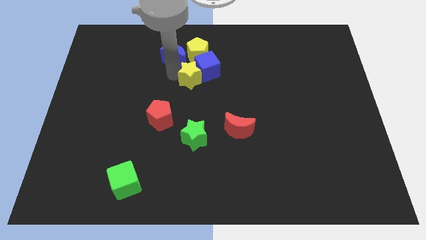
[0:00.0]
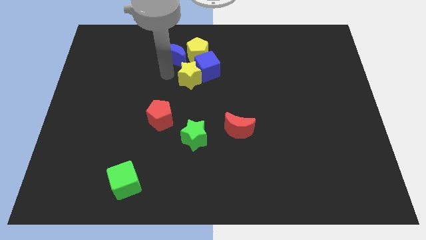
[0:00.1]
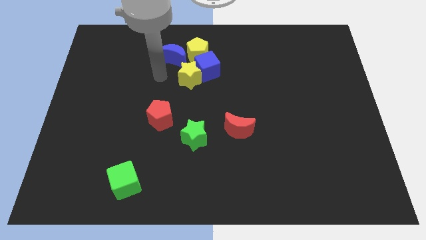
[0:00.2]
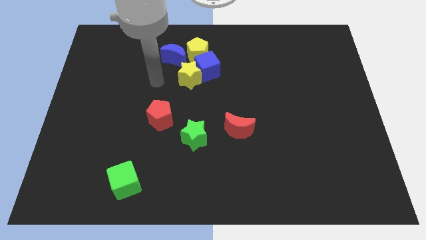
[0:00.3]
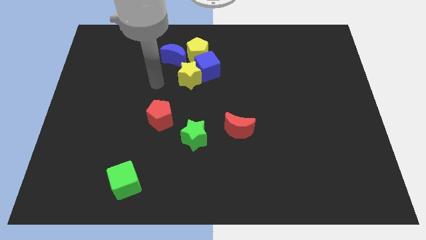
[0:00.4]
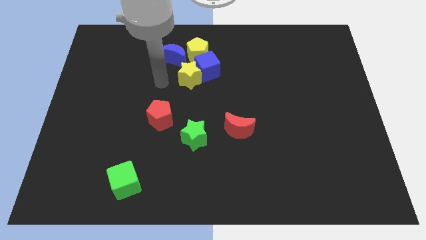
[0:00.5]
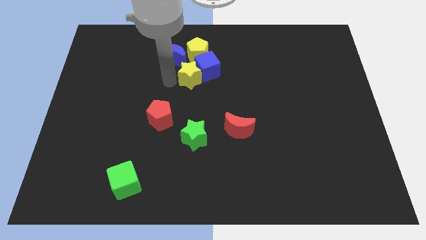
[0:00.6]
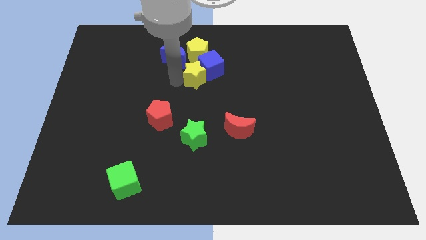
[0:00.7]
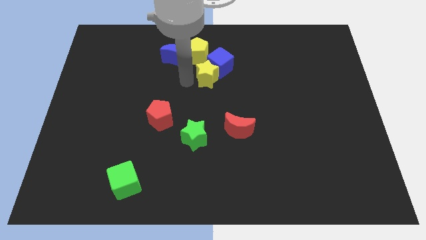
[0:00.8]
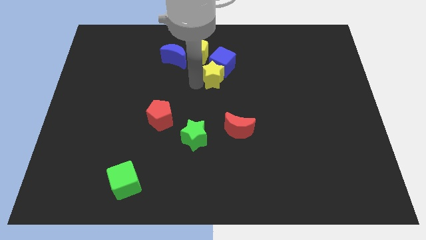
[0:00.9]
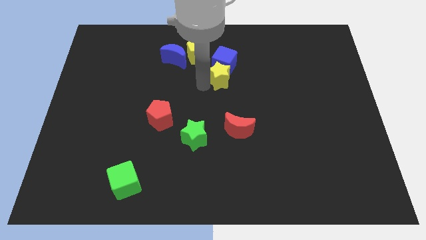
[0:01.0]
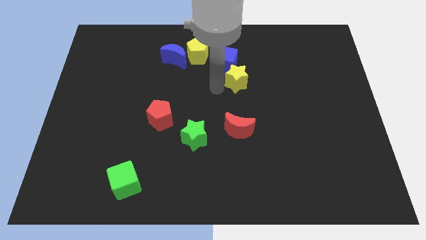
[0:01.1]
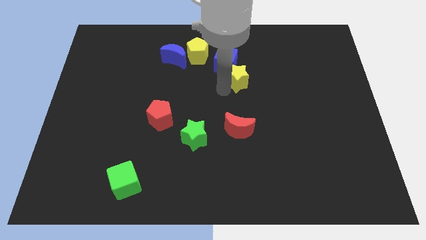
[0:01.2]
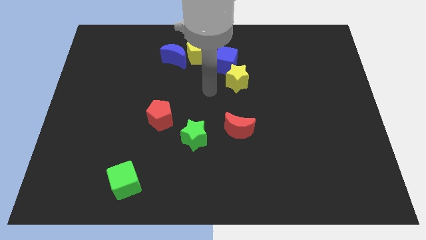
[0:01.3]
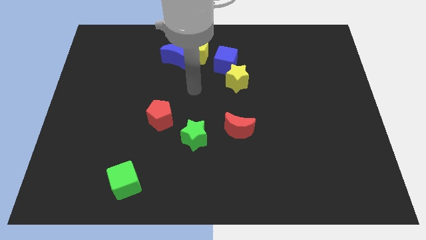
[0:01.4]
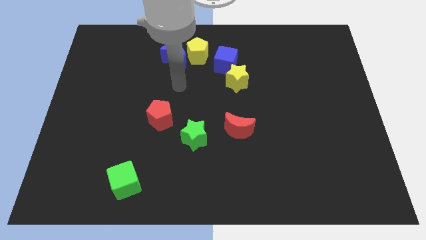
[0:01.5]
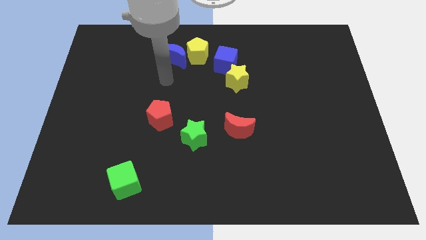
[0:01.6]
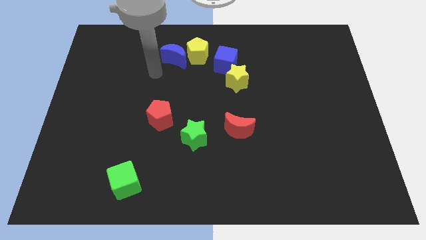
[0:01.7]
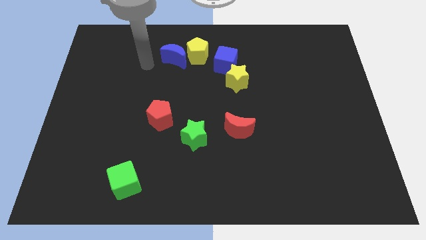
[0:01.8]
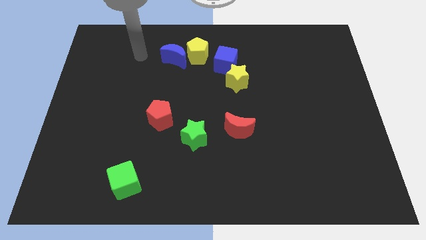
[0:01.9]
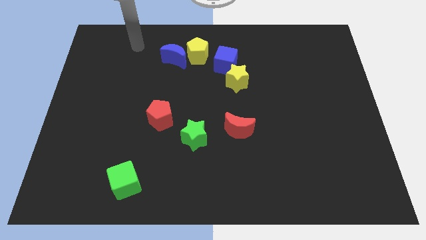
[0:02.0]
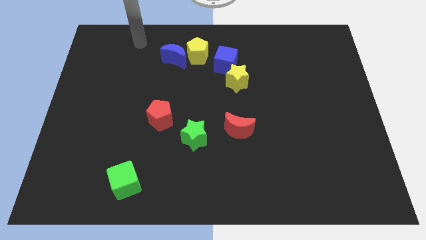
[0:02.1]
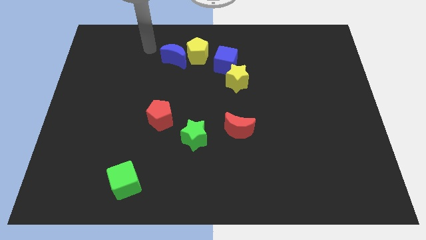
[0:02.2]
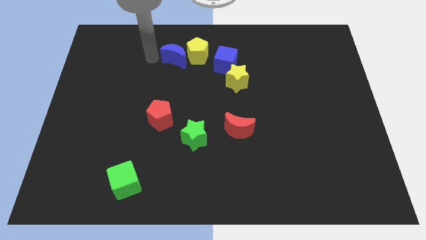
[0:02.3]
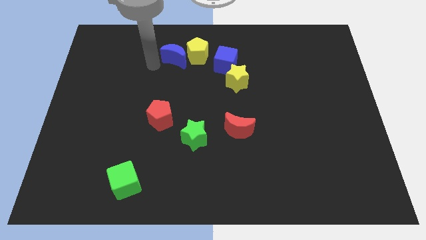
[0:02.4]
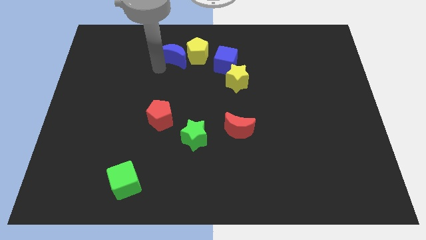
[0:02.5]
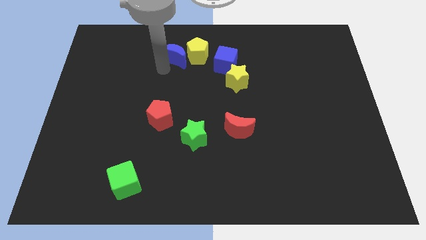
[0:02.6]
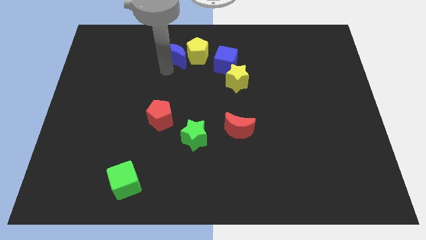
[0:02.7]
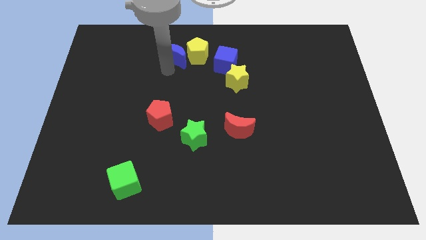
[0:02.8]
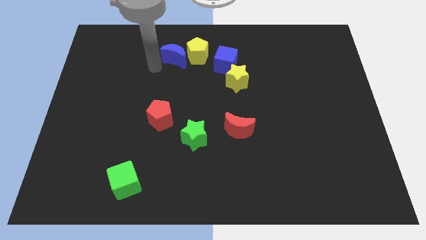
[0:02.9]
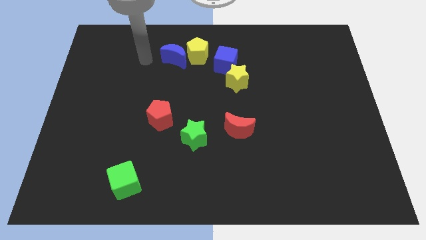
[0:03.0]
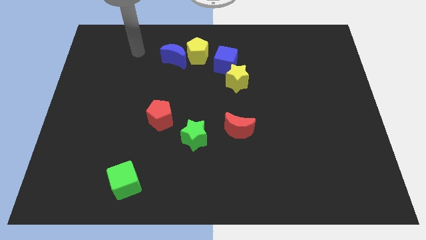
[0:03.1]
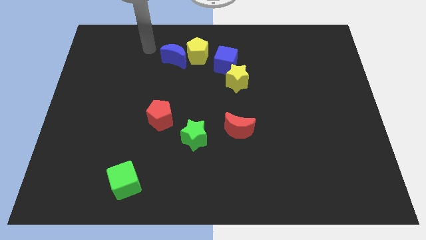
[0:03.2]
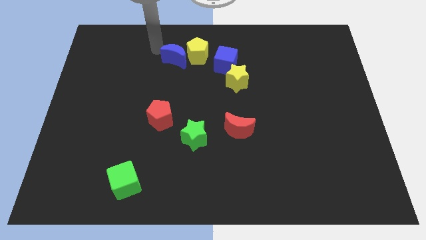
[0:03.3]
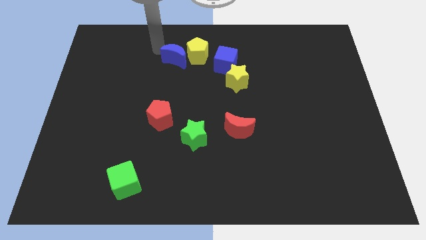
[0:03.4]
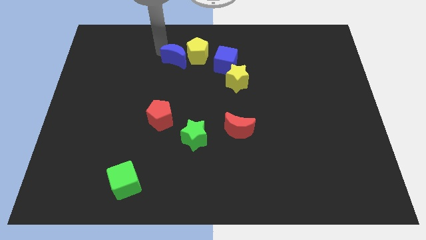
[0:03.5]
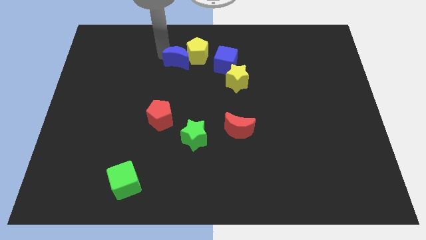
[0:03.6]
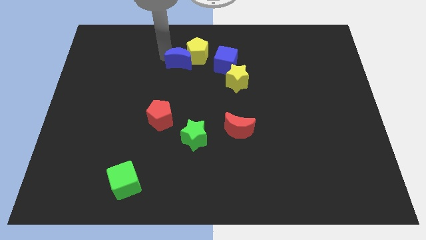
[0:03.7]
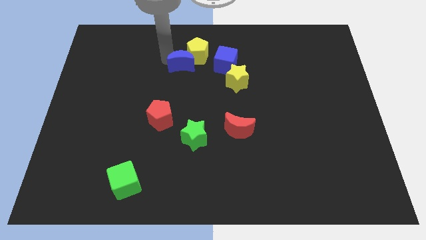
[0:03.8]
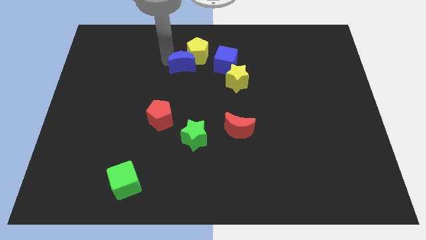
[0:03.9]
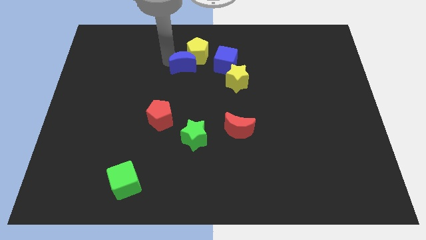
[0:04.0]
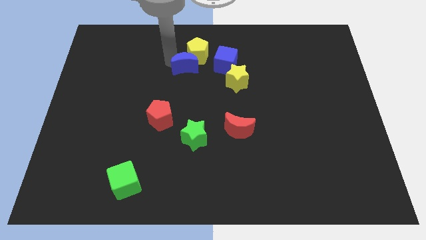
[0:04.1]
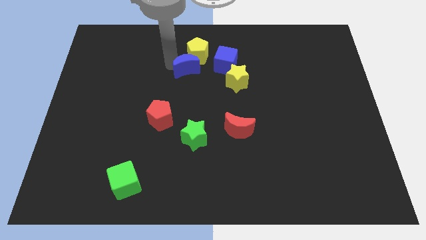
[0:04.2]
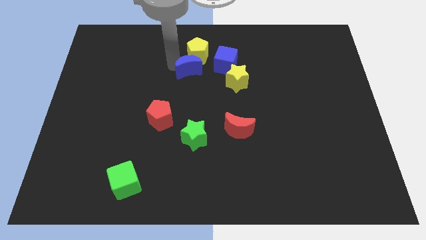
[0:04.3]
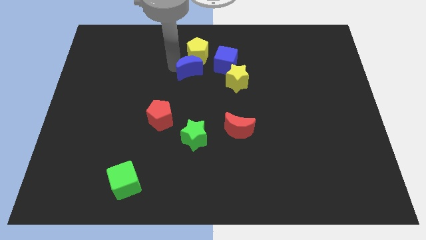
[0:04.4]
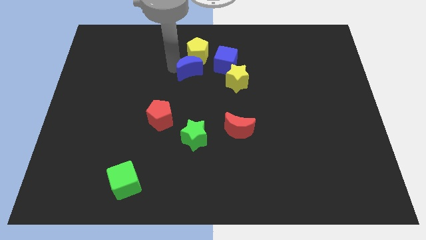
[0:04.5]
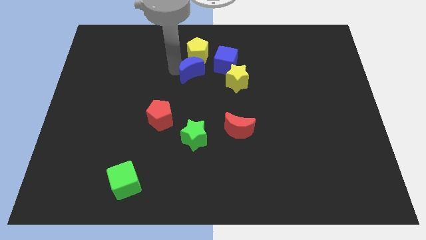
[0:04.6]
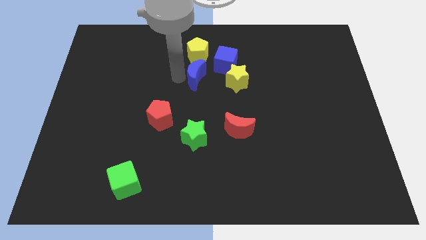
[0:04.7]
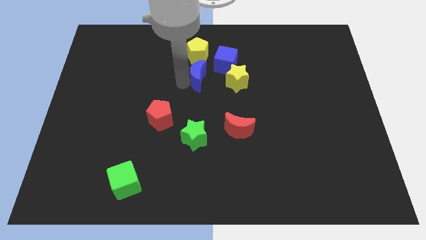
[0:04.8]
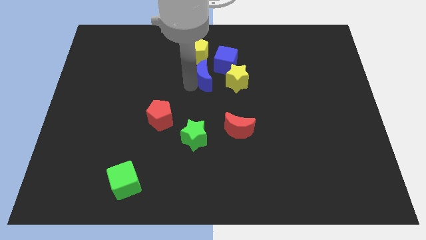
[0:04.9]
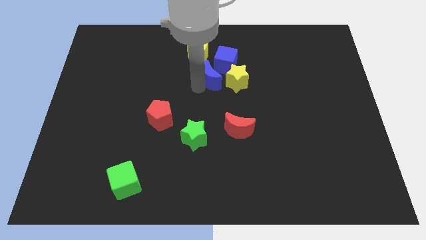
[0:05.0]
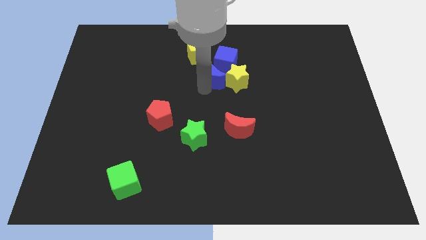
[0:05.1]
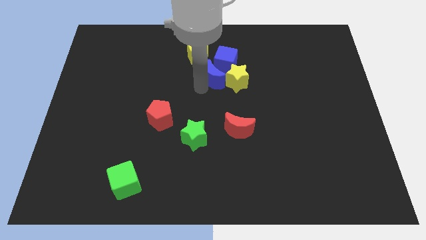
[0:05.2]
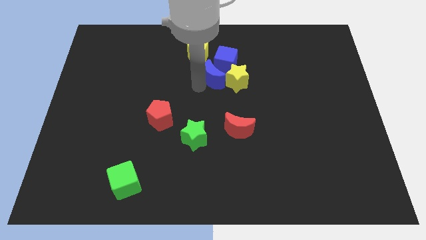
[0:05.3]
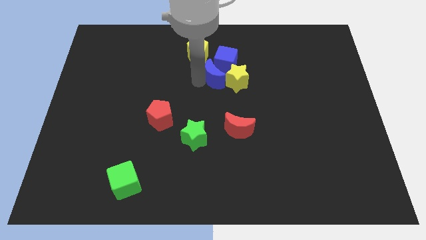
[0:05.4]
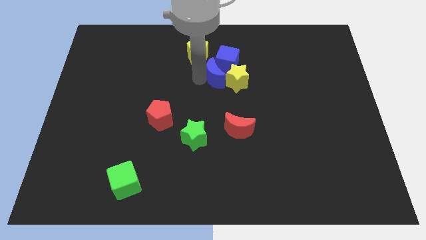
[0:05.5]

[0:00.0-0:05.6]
place blue moon close to yellow star

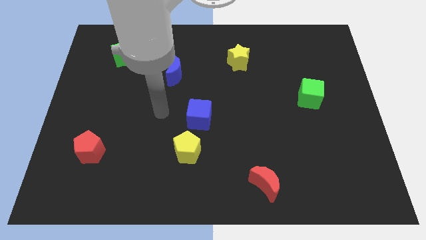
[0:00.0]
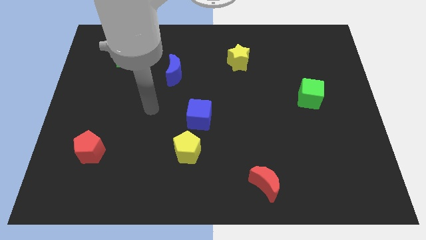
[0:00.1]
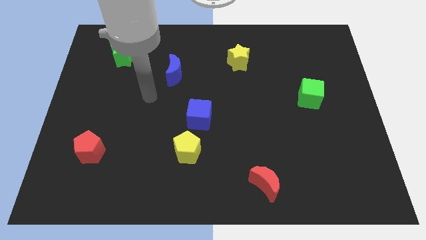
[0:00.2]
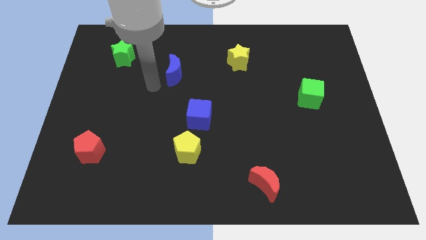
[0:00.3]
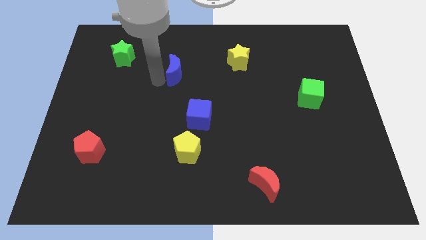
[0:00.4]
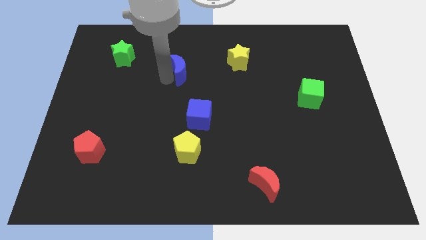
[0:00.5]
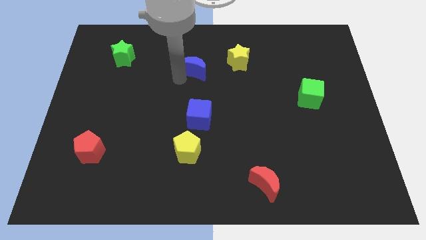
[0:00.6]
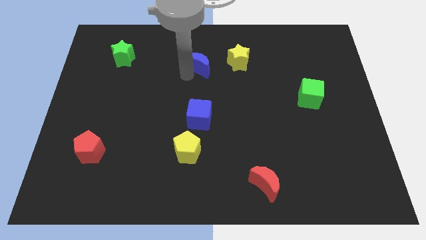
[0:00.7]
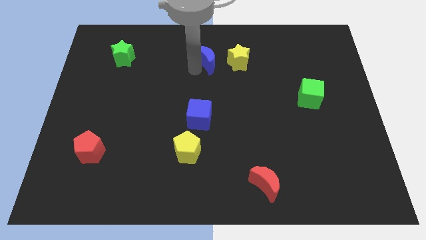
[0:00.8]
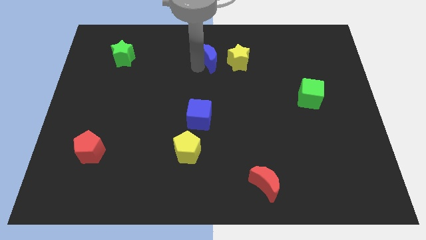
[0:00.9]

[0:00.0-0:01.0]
place the blue crescent vertically above the blue cube

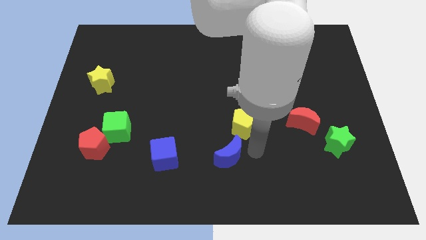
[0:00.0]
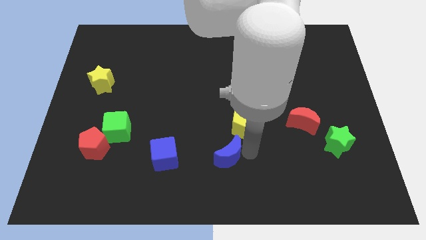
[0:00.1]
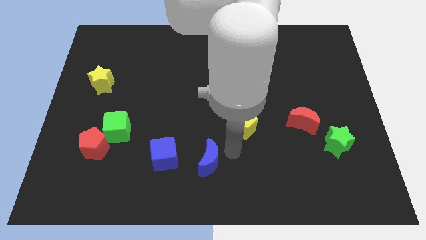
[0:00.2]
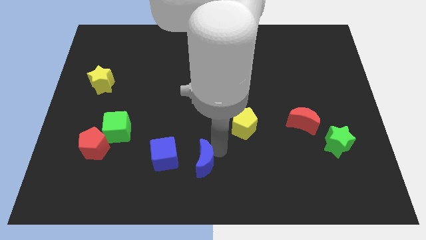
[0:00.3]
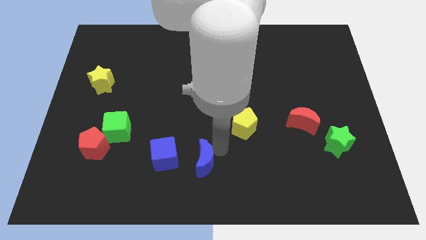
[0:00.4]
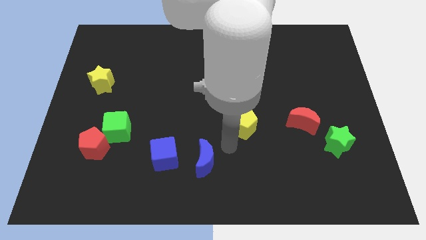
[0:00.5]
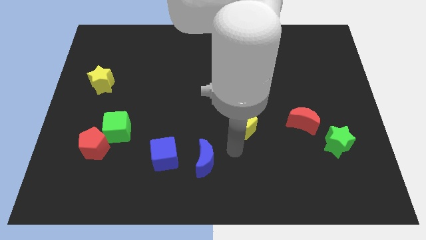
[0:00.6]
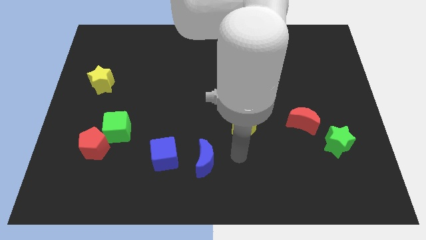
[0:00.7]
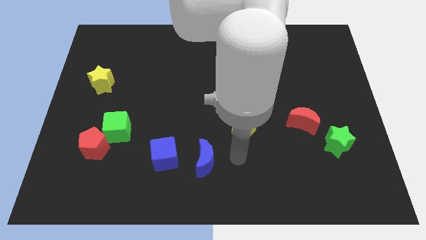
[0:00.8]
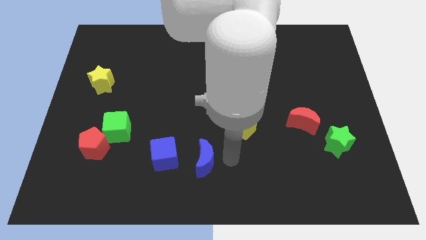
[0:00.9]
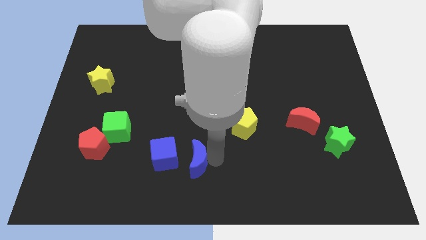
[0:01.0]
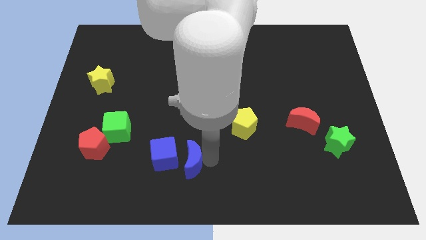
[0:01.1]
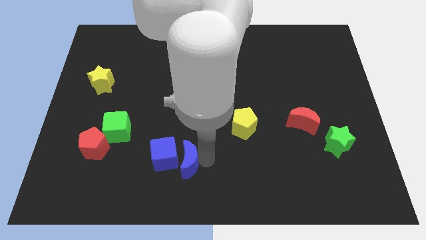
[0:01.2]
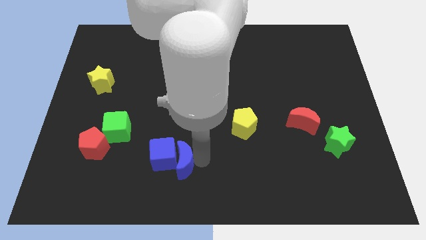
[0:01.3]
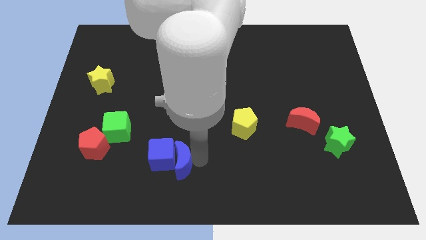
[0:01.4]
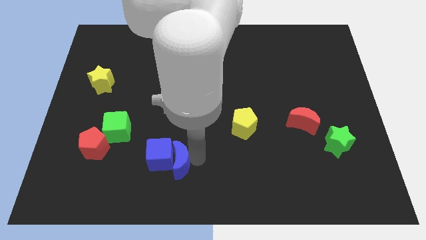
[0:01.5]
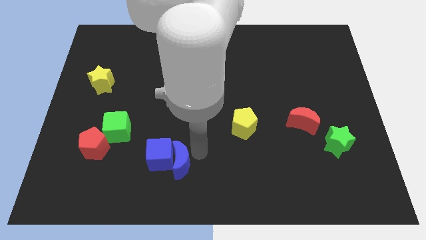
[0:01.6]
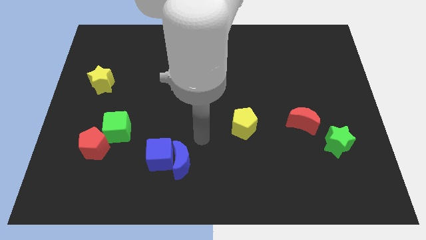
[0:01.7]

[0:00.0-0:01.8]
push the blue crescent into the blue cube

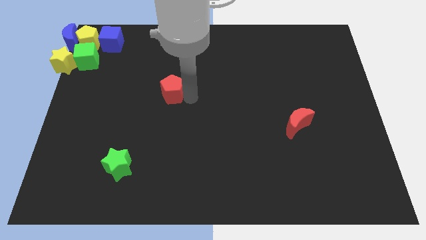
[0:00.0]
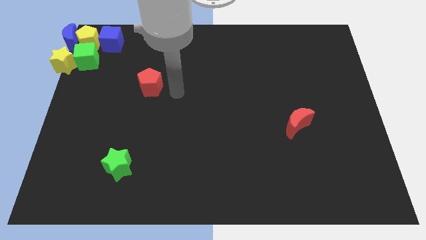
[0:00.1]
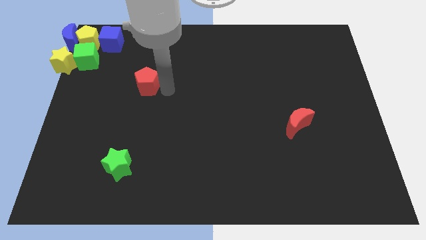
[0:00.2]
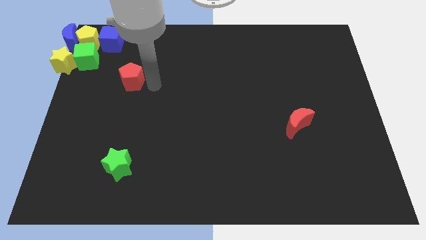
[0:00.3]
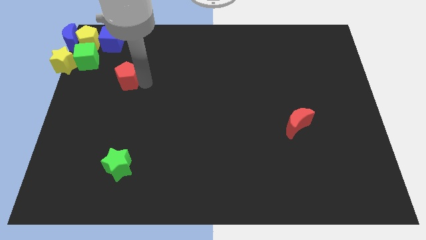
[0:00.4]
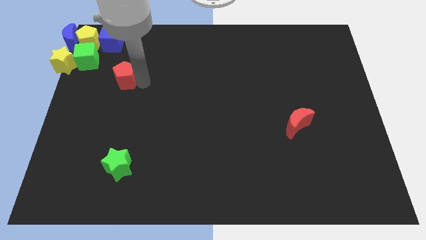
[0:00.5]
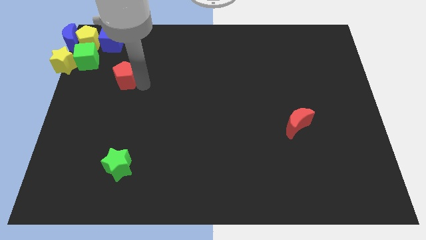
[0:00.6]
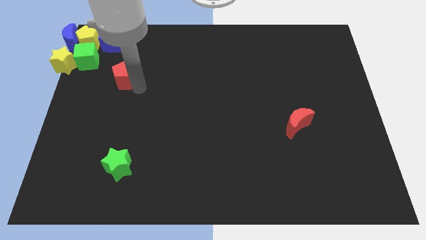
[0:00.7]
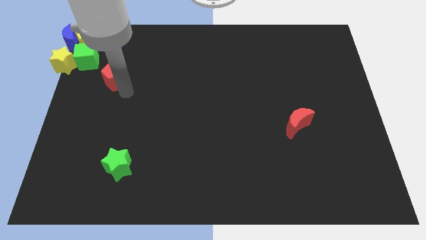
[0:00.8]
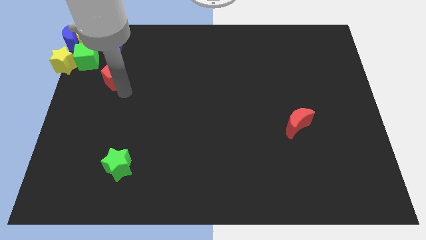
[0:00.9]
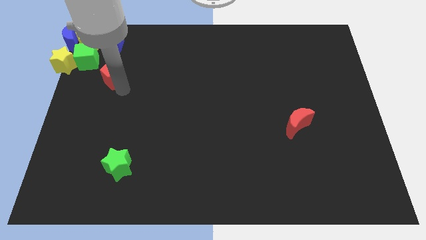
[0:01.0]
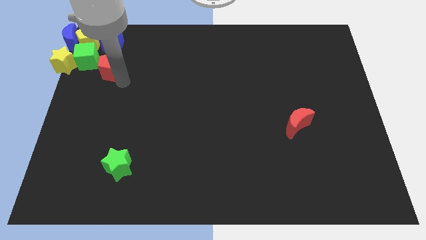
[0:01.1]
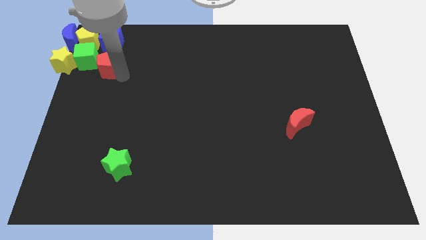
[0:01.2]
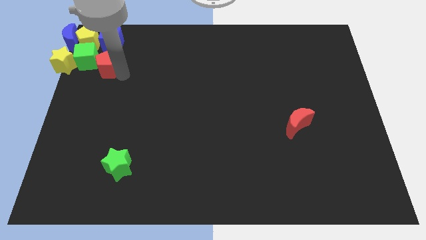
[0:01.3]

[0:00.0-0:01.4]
place the red pentagon below the blue cube
